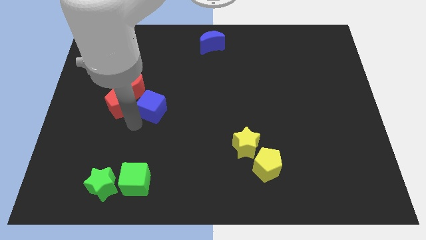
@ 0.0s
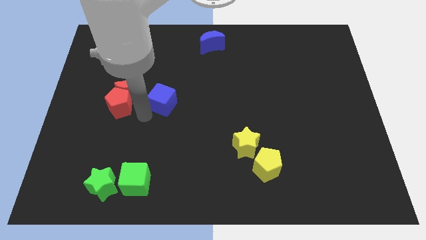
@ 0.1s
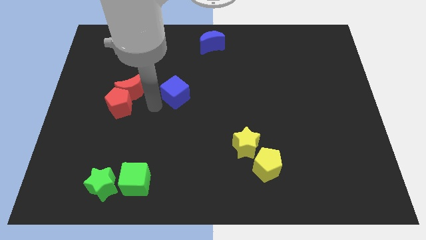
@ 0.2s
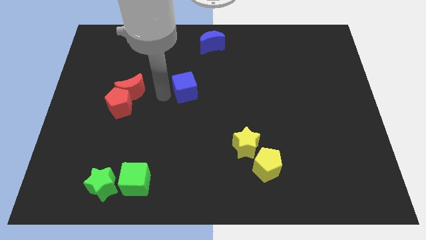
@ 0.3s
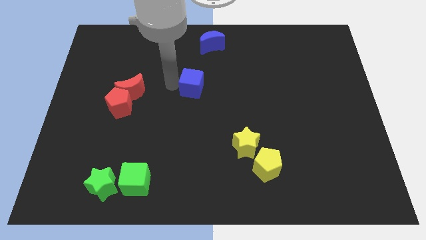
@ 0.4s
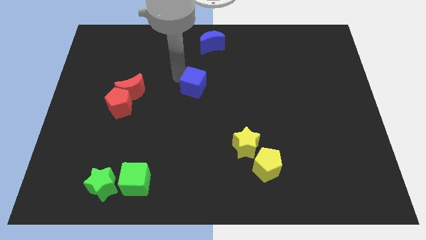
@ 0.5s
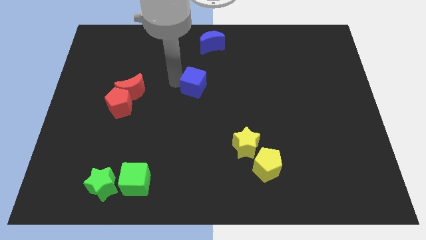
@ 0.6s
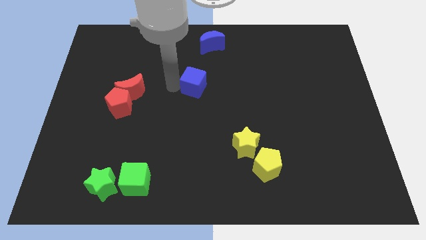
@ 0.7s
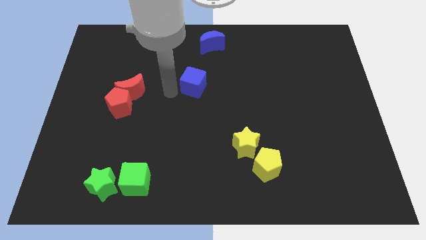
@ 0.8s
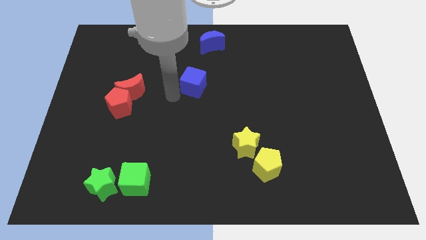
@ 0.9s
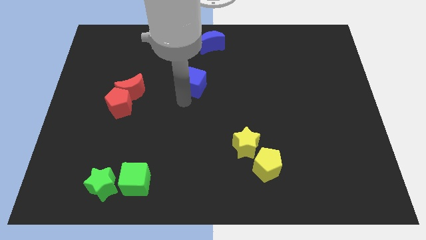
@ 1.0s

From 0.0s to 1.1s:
place the blue cube to the right of the red crescent

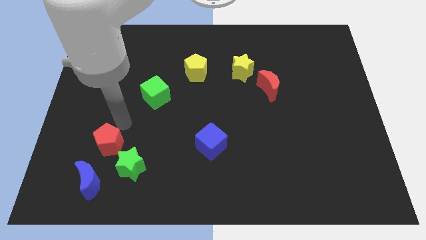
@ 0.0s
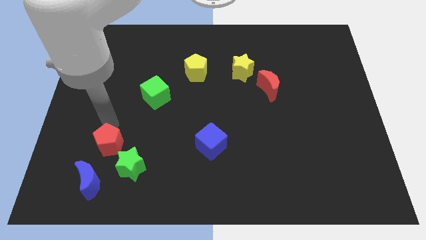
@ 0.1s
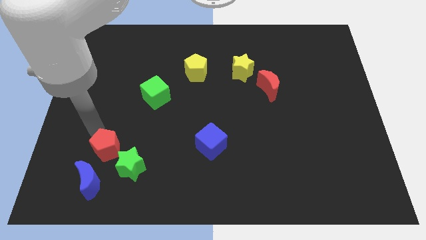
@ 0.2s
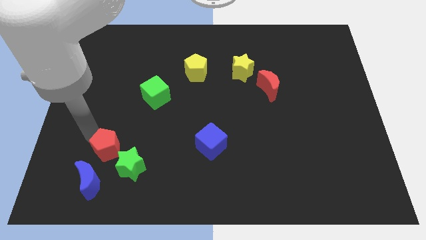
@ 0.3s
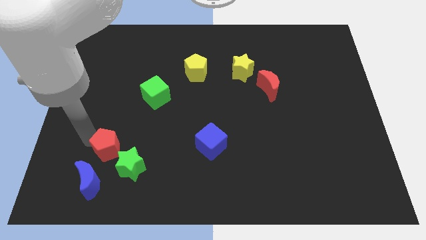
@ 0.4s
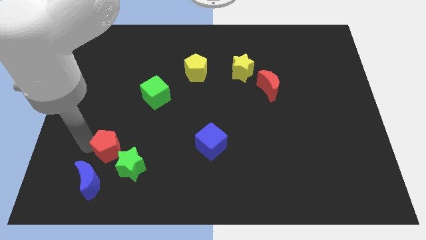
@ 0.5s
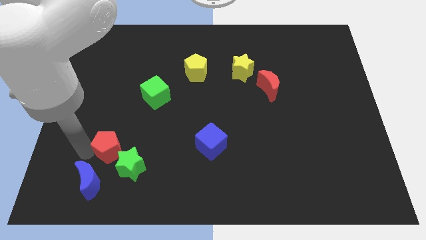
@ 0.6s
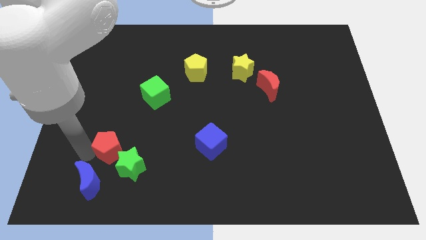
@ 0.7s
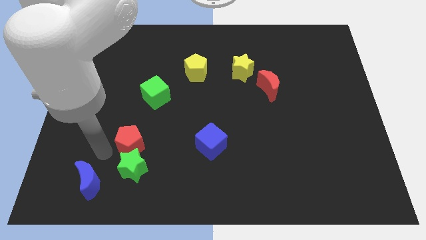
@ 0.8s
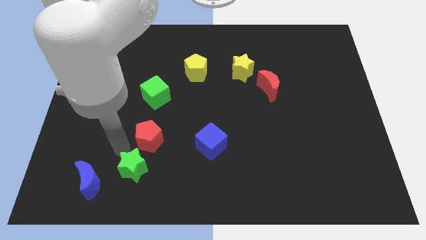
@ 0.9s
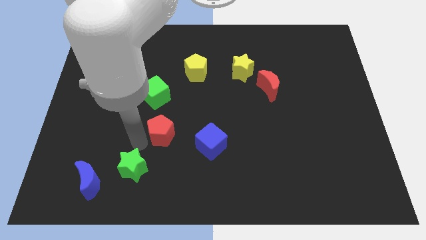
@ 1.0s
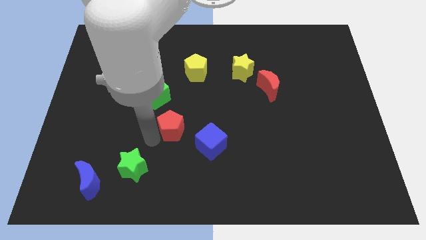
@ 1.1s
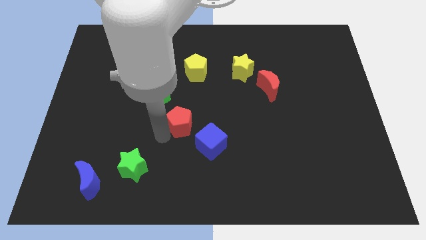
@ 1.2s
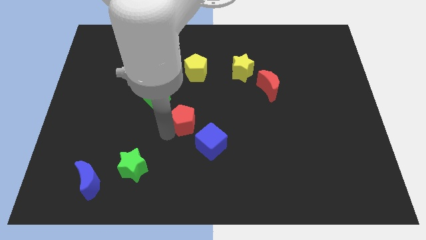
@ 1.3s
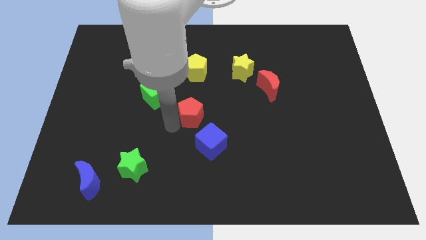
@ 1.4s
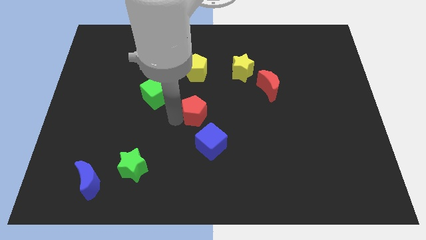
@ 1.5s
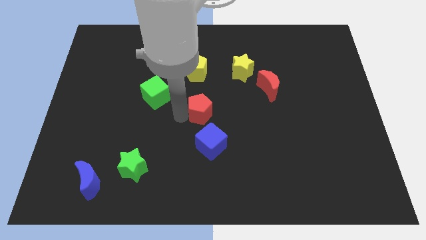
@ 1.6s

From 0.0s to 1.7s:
place the red pentagon below the yellow pentagon

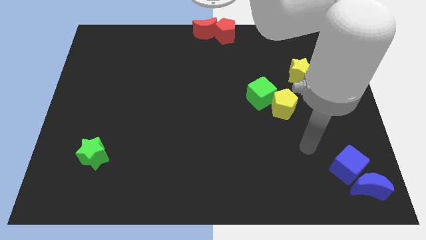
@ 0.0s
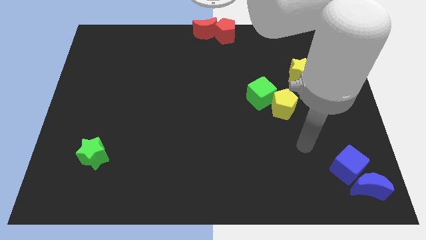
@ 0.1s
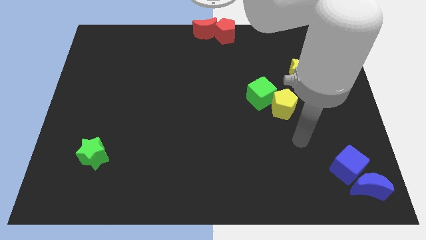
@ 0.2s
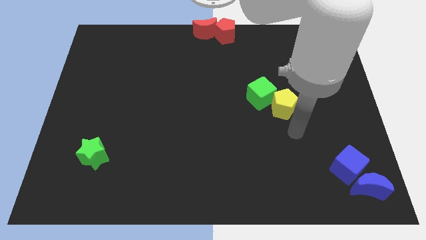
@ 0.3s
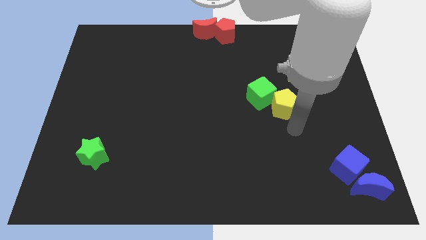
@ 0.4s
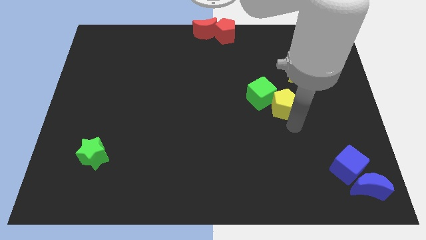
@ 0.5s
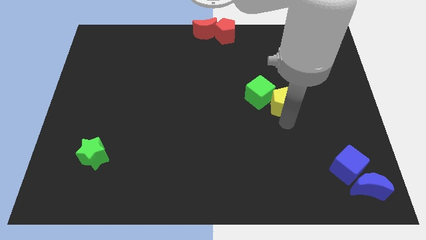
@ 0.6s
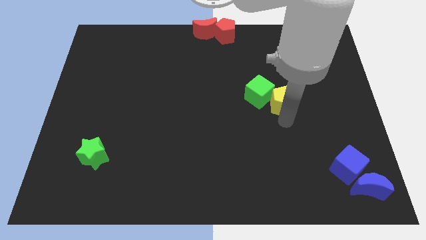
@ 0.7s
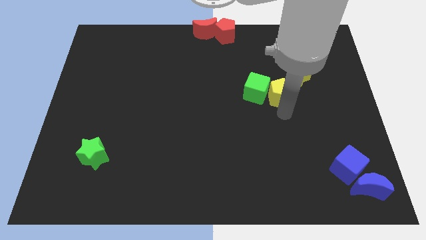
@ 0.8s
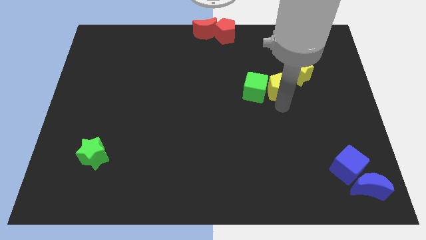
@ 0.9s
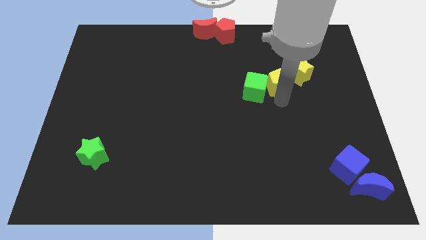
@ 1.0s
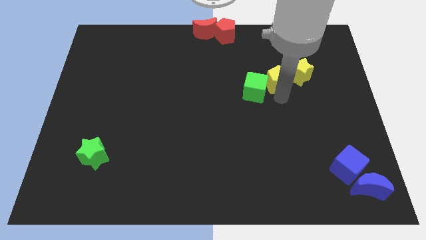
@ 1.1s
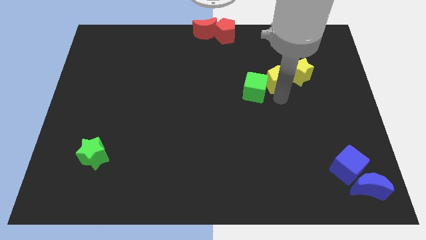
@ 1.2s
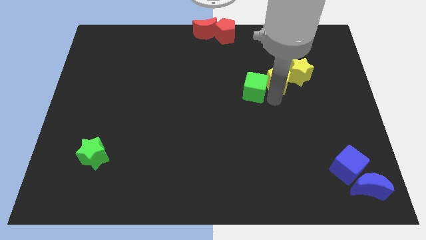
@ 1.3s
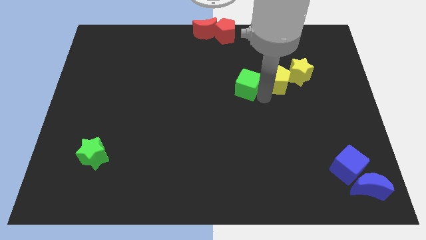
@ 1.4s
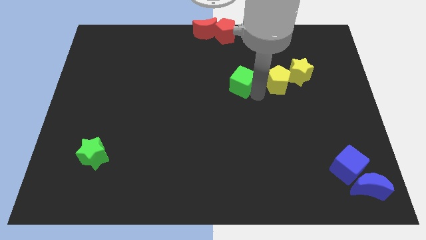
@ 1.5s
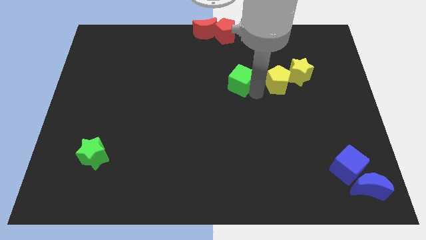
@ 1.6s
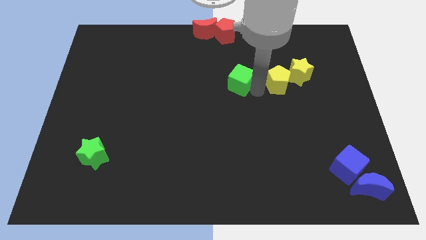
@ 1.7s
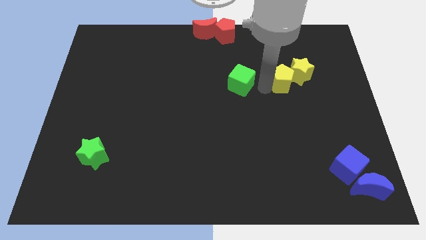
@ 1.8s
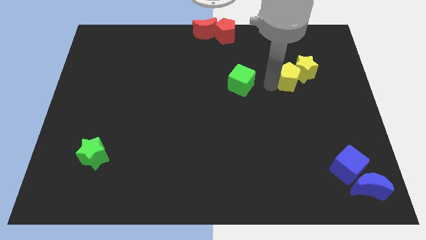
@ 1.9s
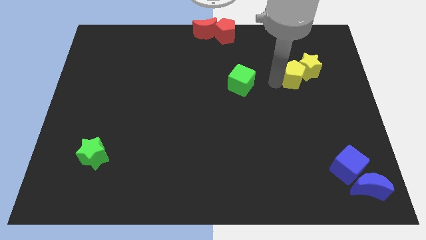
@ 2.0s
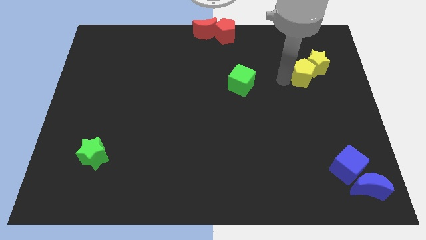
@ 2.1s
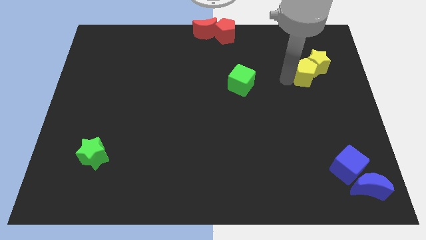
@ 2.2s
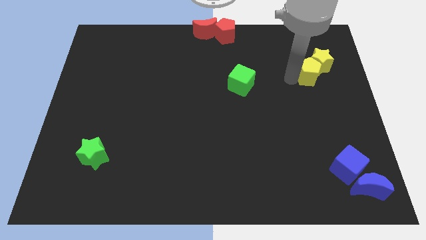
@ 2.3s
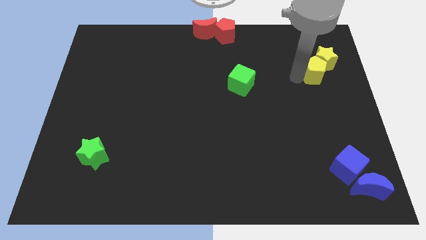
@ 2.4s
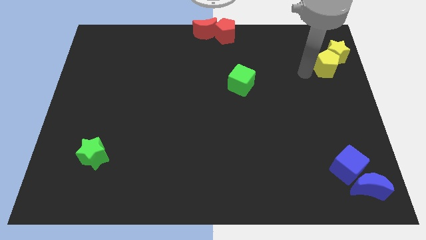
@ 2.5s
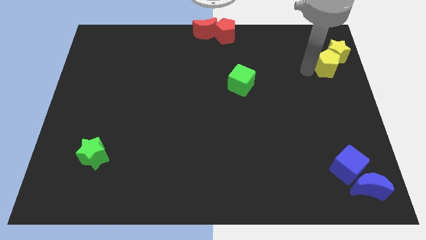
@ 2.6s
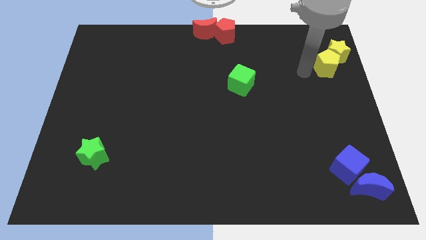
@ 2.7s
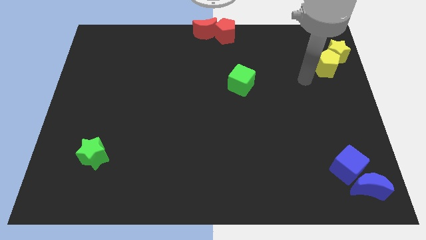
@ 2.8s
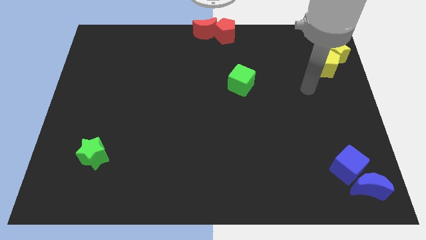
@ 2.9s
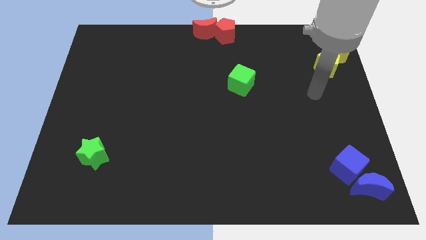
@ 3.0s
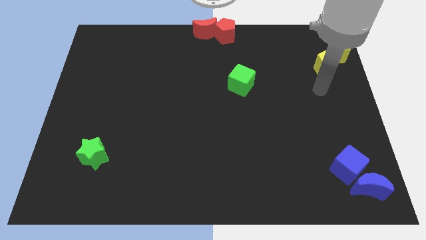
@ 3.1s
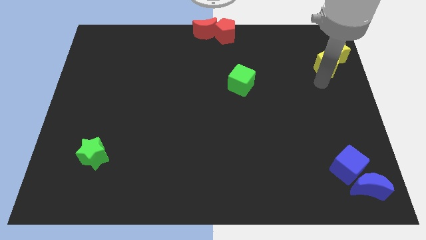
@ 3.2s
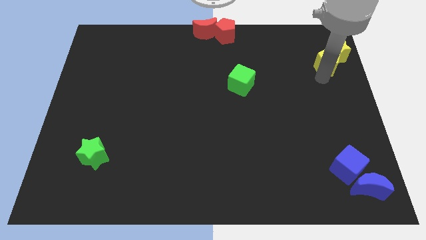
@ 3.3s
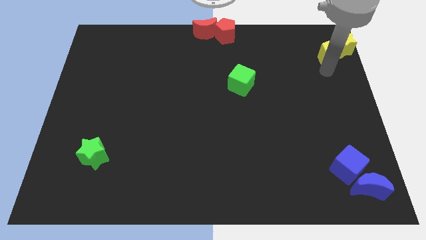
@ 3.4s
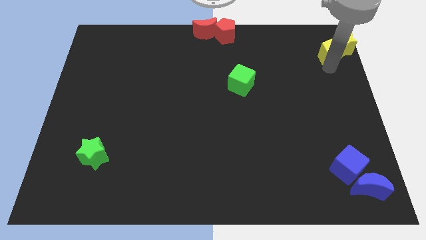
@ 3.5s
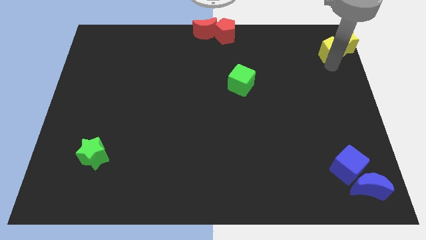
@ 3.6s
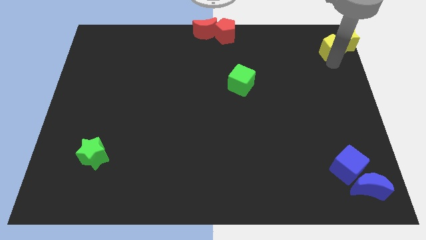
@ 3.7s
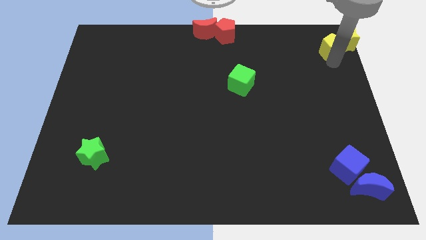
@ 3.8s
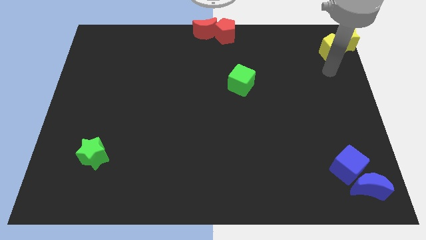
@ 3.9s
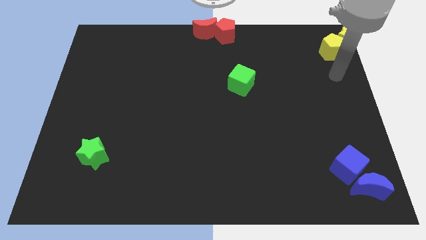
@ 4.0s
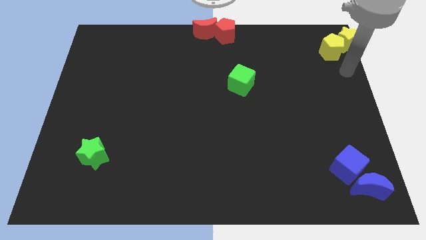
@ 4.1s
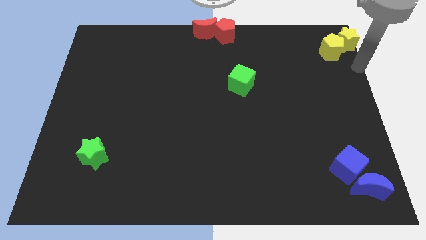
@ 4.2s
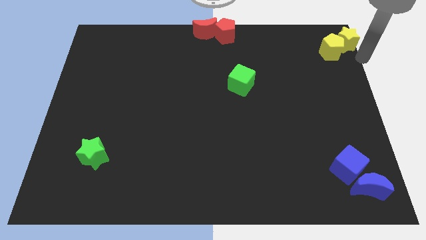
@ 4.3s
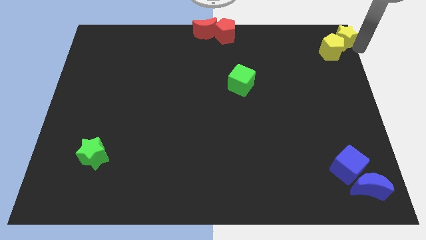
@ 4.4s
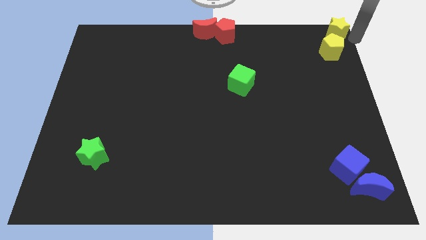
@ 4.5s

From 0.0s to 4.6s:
move the yellow blocks to the top right

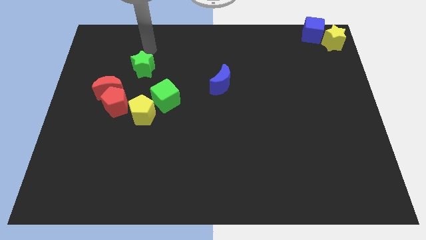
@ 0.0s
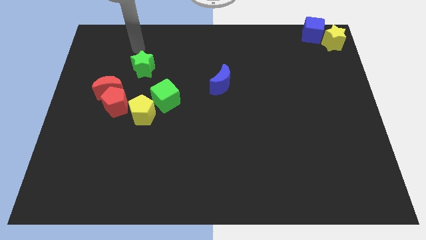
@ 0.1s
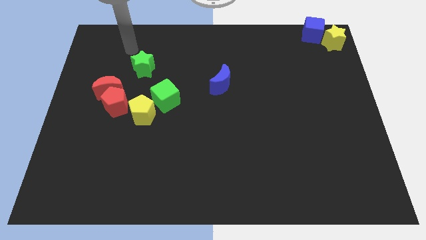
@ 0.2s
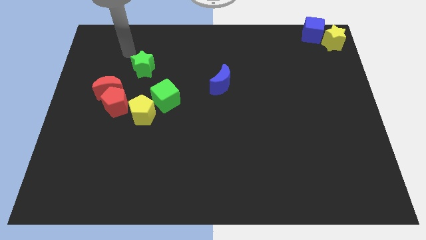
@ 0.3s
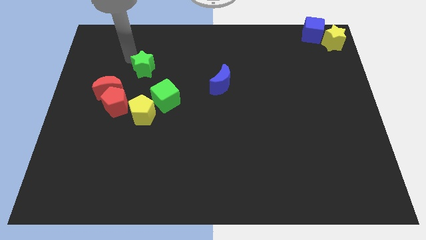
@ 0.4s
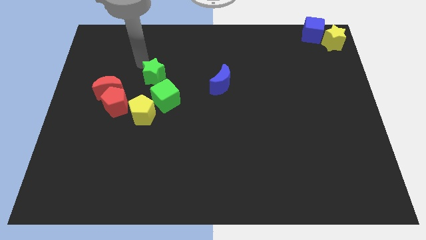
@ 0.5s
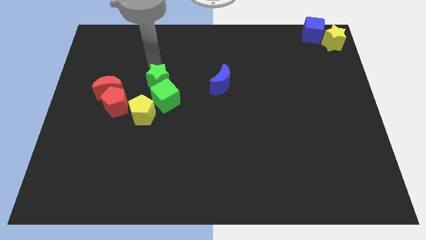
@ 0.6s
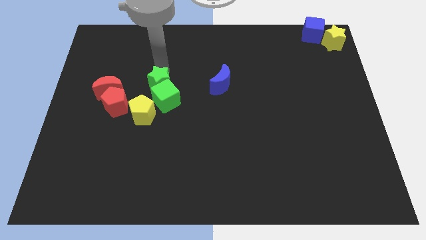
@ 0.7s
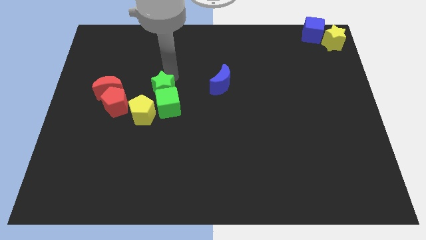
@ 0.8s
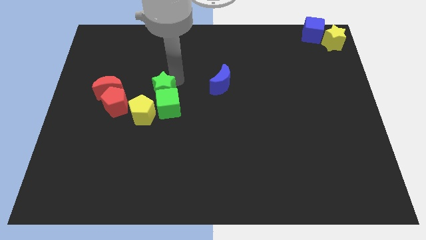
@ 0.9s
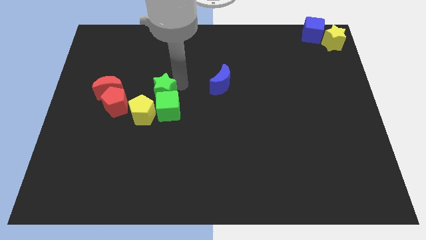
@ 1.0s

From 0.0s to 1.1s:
put the green star at the top of the green cube

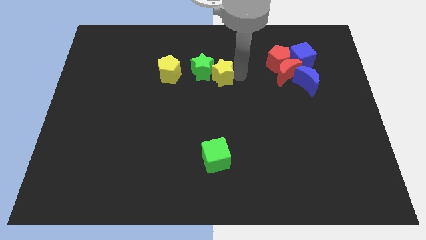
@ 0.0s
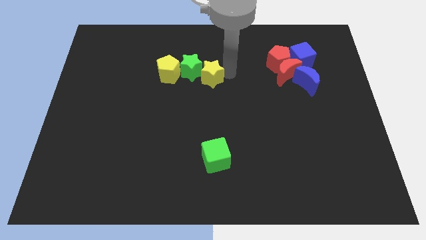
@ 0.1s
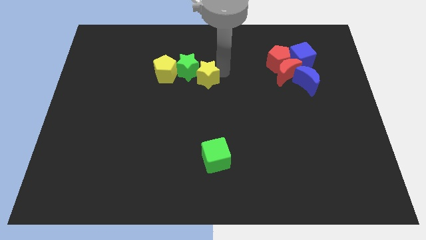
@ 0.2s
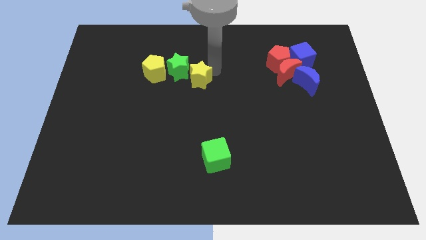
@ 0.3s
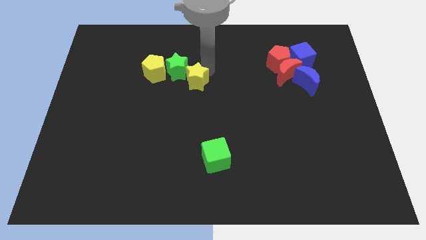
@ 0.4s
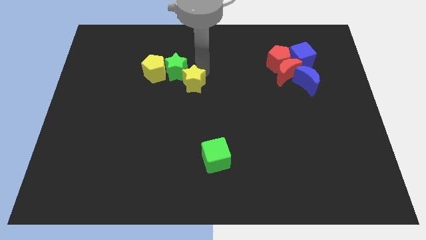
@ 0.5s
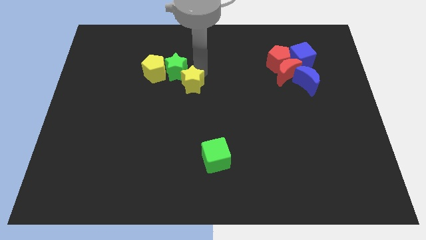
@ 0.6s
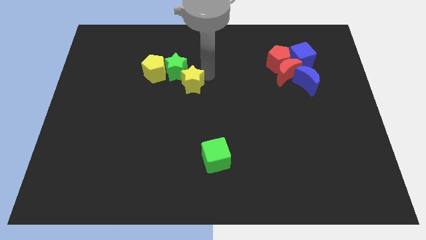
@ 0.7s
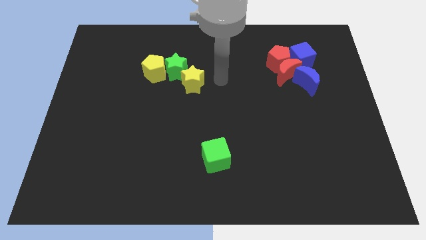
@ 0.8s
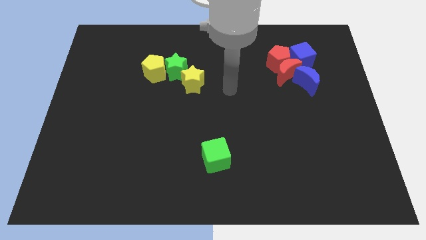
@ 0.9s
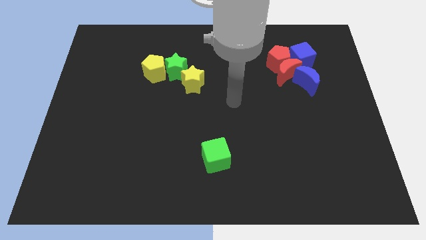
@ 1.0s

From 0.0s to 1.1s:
move your arm away from the yellow star
